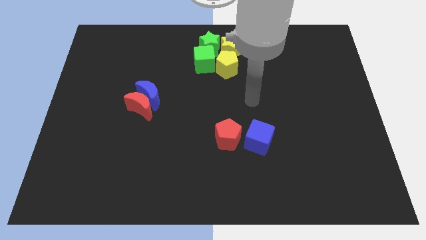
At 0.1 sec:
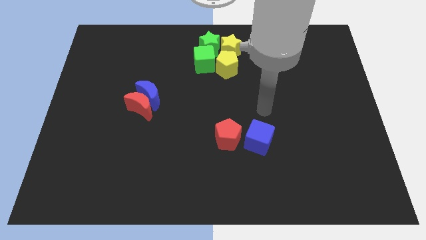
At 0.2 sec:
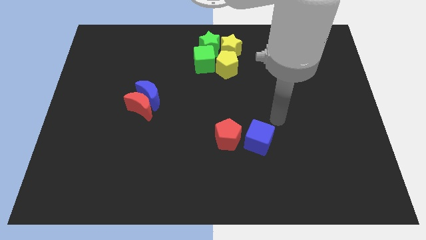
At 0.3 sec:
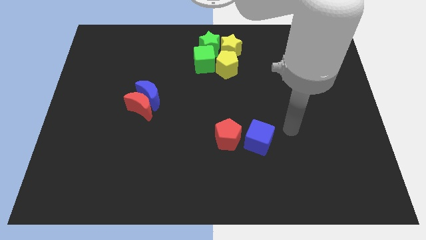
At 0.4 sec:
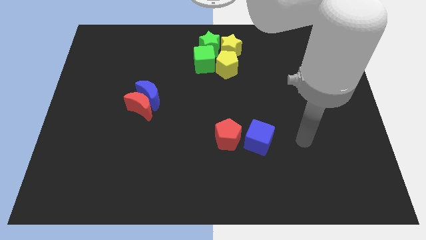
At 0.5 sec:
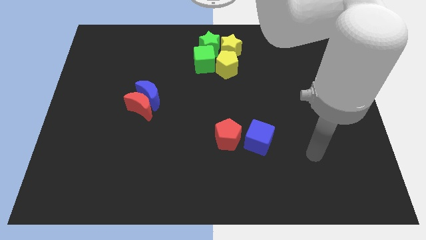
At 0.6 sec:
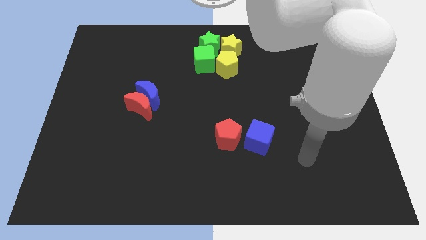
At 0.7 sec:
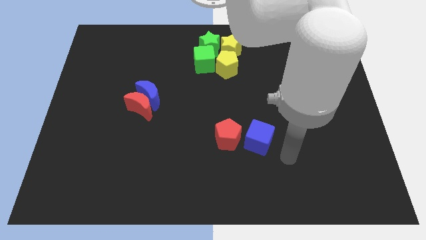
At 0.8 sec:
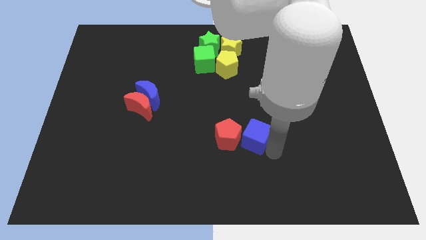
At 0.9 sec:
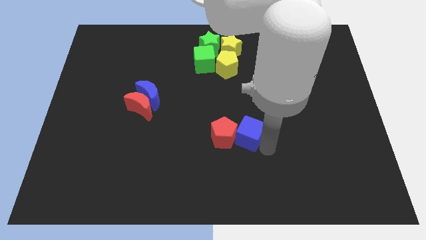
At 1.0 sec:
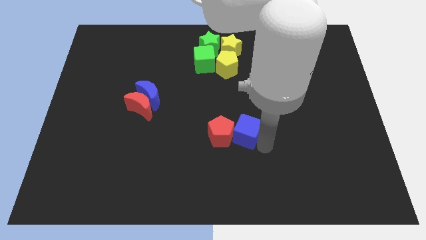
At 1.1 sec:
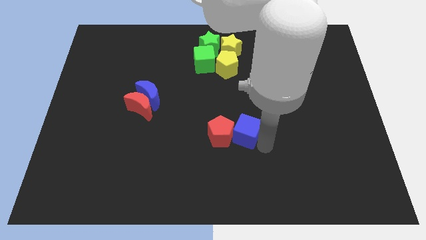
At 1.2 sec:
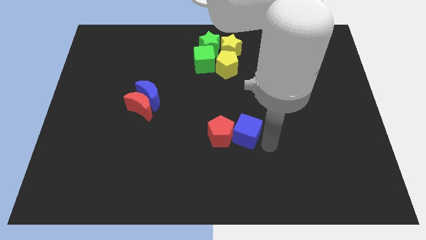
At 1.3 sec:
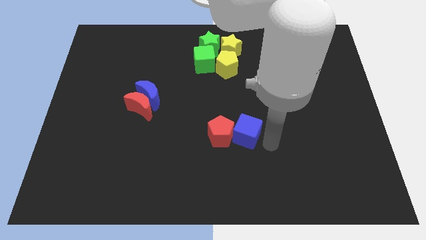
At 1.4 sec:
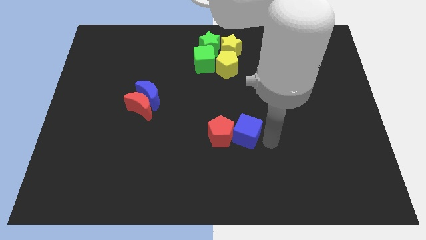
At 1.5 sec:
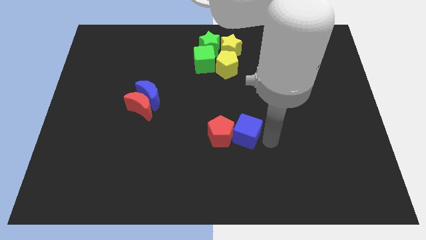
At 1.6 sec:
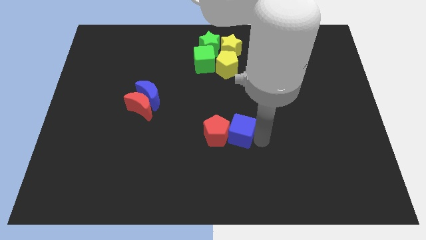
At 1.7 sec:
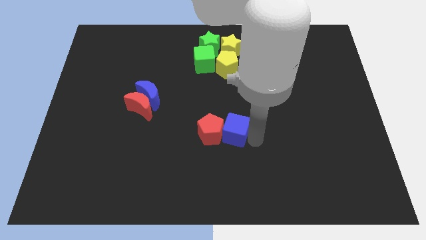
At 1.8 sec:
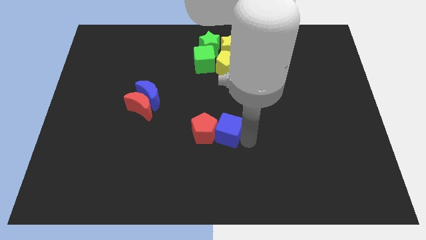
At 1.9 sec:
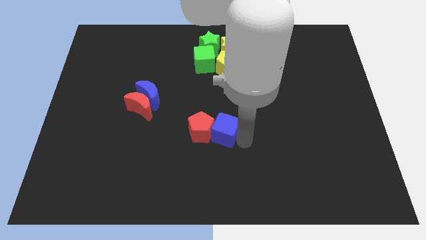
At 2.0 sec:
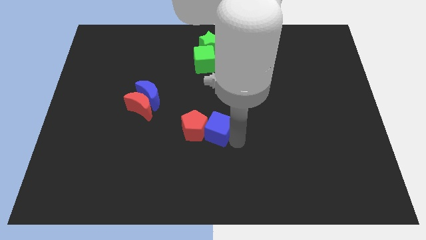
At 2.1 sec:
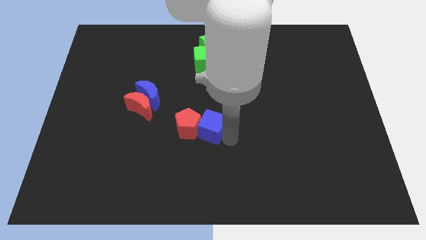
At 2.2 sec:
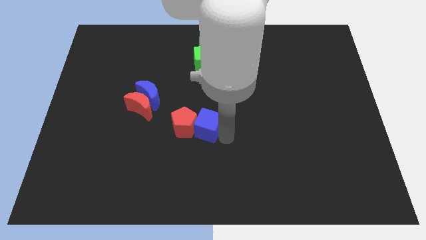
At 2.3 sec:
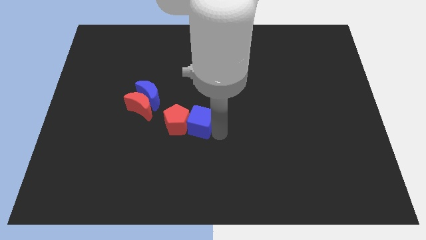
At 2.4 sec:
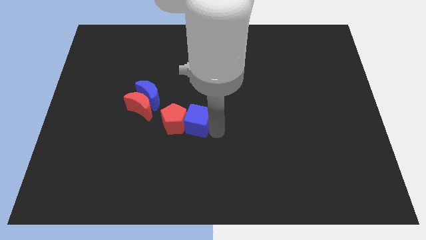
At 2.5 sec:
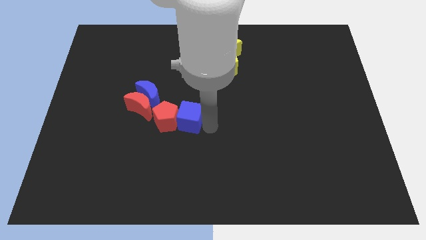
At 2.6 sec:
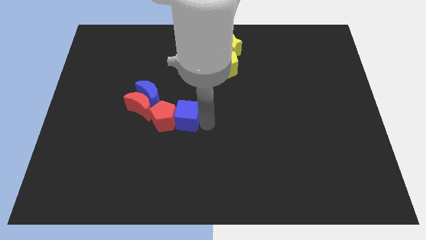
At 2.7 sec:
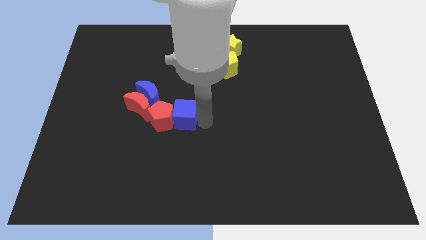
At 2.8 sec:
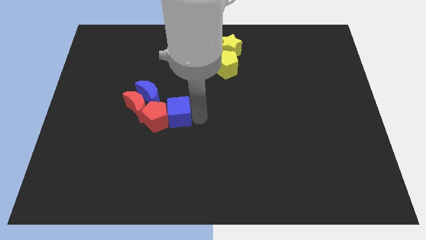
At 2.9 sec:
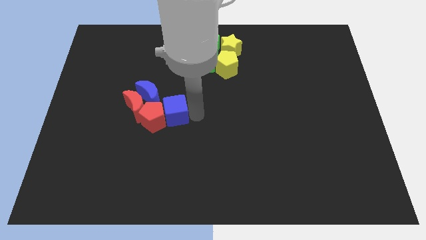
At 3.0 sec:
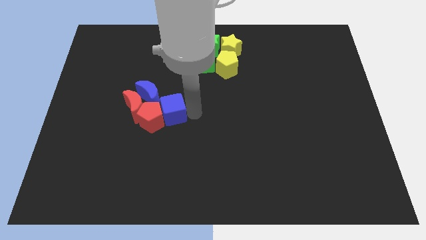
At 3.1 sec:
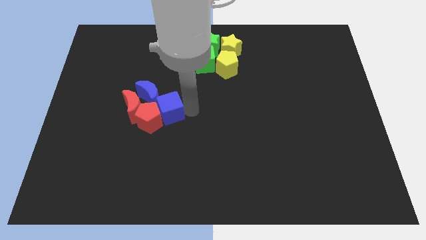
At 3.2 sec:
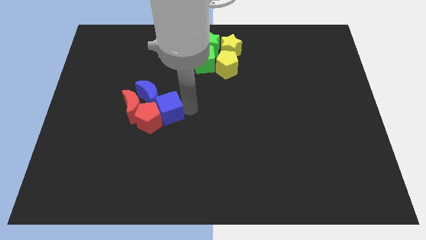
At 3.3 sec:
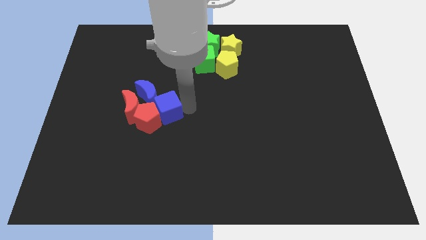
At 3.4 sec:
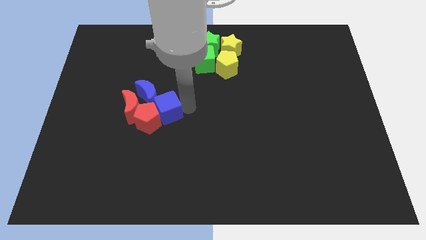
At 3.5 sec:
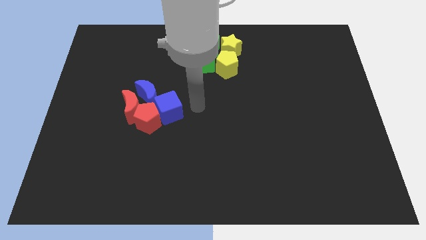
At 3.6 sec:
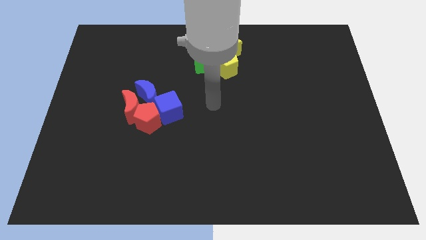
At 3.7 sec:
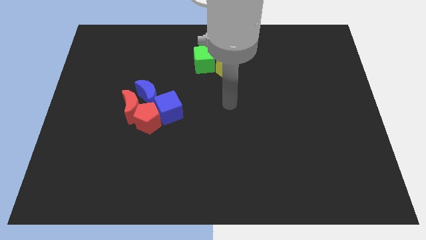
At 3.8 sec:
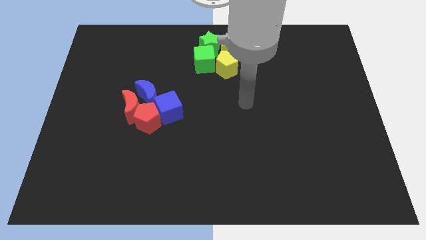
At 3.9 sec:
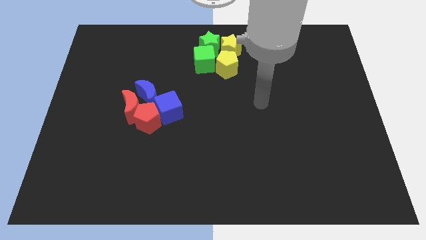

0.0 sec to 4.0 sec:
move blue cube along with red pentagon towards red moon towards the blue crescent

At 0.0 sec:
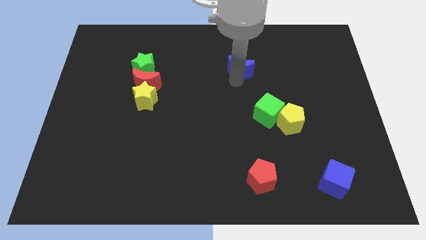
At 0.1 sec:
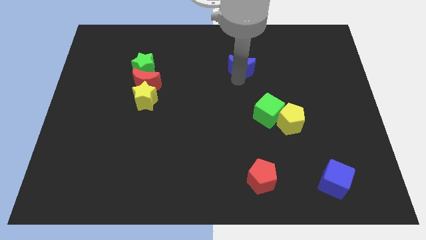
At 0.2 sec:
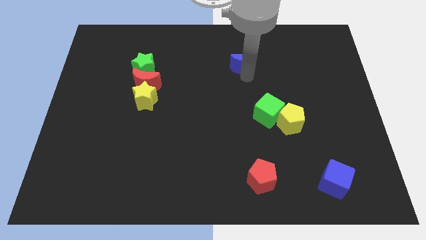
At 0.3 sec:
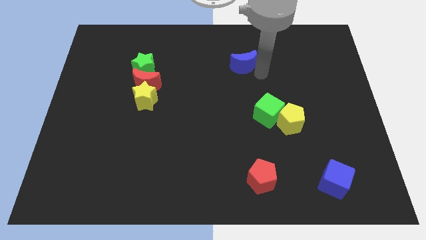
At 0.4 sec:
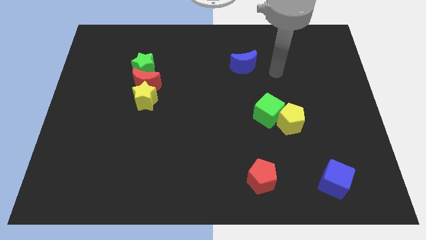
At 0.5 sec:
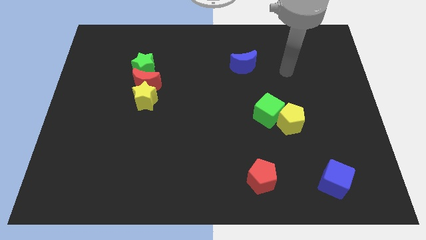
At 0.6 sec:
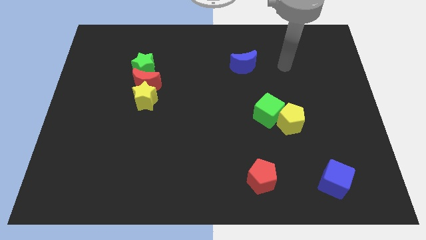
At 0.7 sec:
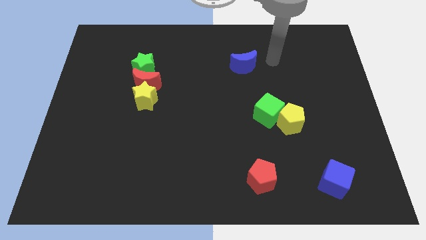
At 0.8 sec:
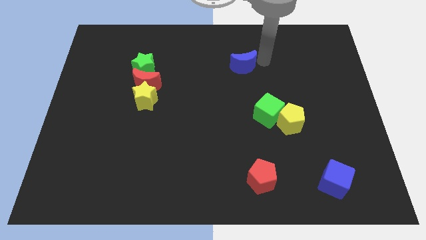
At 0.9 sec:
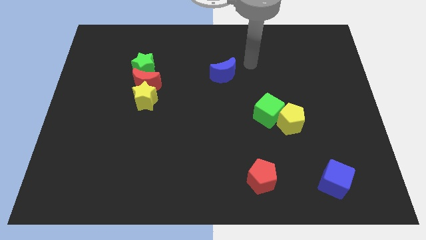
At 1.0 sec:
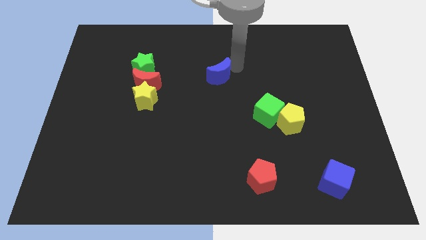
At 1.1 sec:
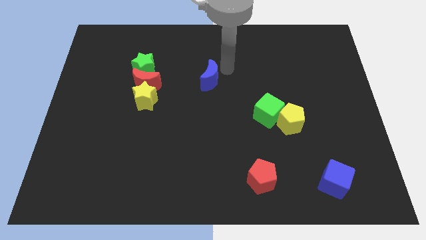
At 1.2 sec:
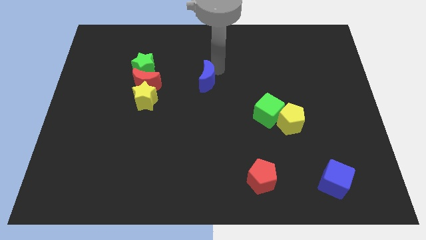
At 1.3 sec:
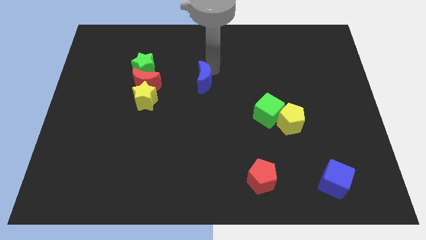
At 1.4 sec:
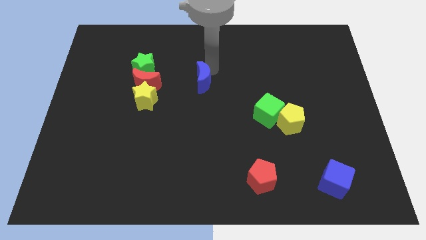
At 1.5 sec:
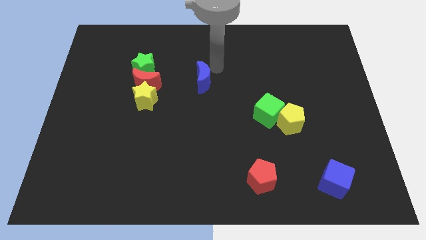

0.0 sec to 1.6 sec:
place the blue moon to the right of the red moon

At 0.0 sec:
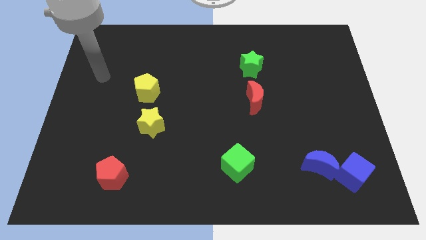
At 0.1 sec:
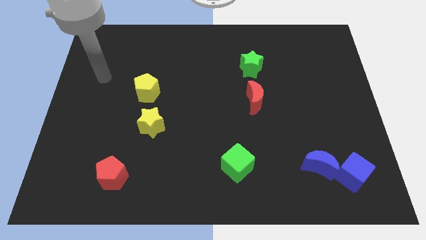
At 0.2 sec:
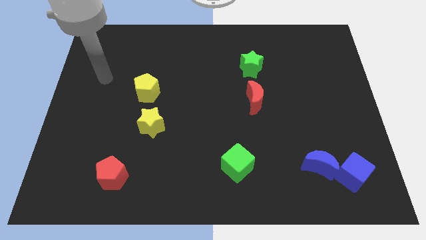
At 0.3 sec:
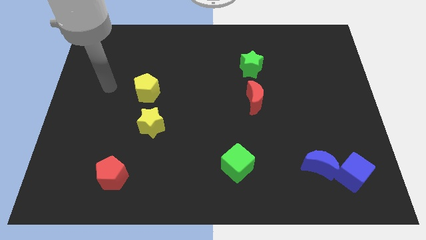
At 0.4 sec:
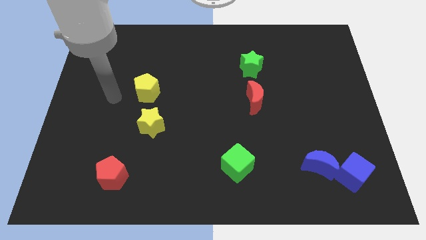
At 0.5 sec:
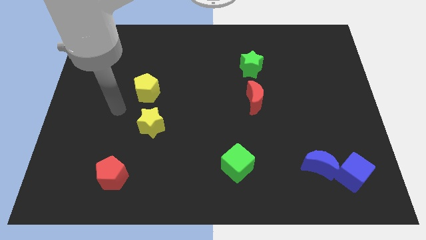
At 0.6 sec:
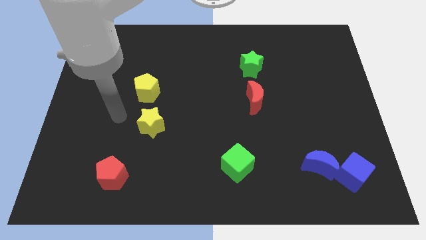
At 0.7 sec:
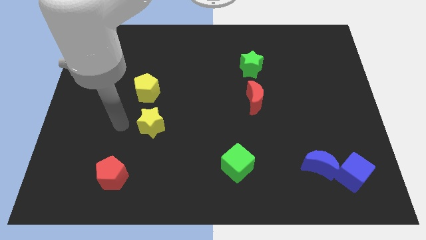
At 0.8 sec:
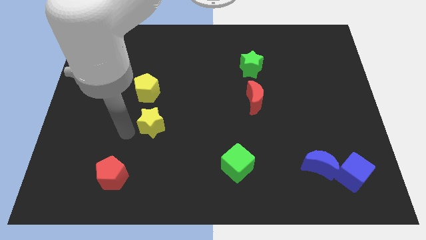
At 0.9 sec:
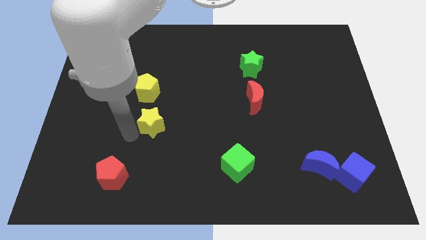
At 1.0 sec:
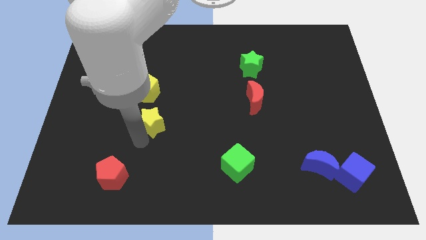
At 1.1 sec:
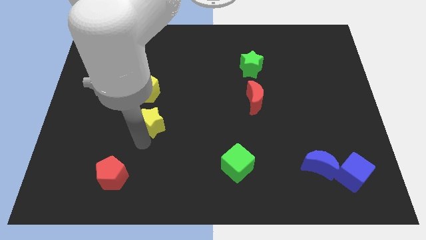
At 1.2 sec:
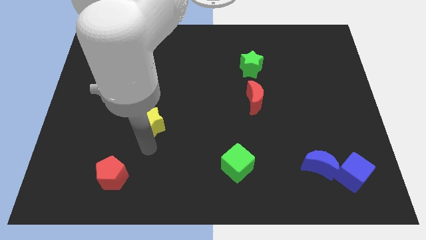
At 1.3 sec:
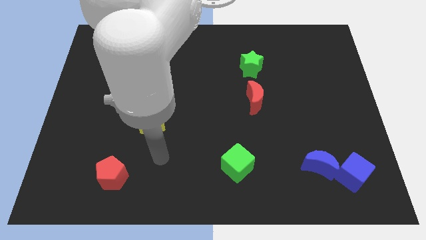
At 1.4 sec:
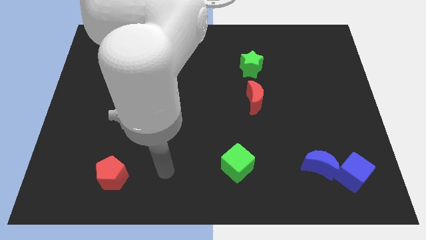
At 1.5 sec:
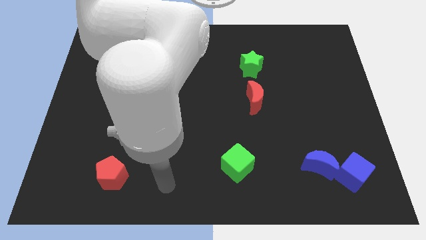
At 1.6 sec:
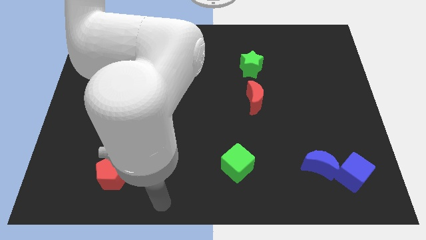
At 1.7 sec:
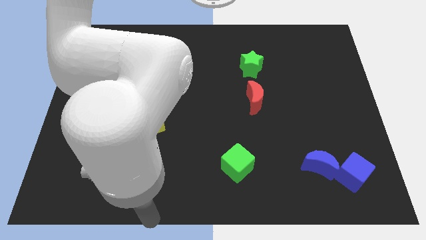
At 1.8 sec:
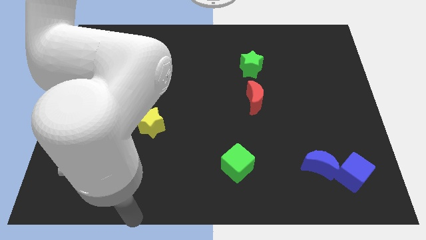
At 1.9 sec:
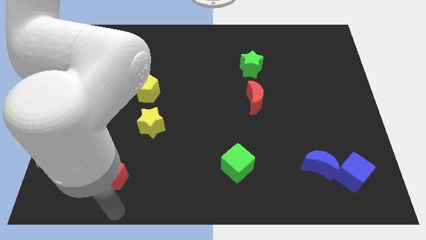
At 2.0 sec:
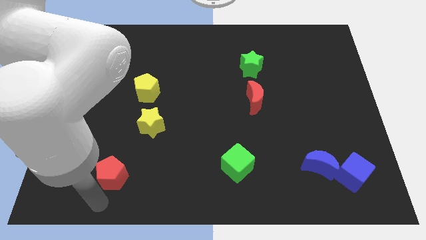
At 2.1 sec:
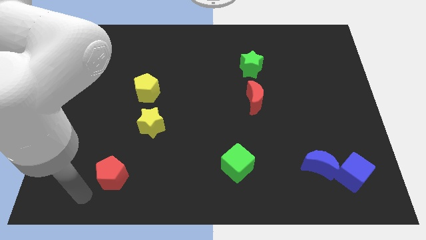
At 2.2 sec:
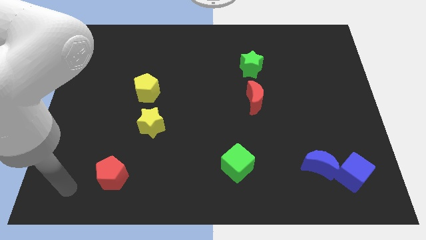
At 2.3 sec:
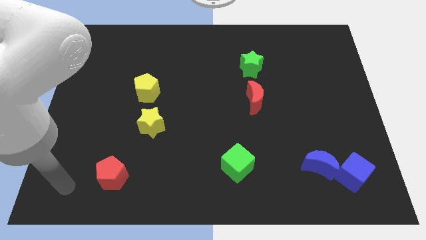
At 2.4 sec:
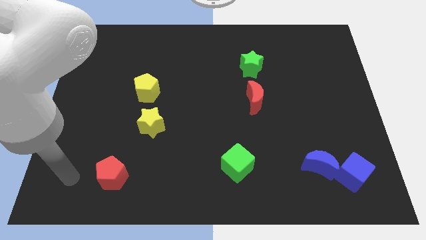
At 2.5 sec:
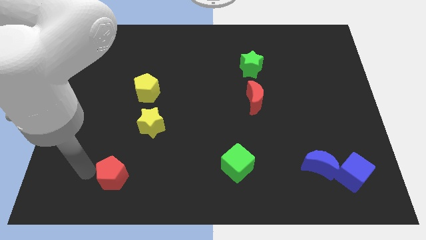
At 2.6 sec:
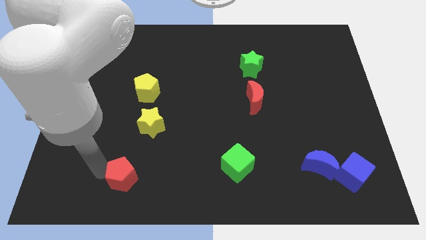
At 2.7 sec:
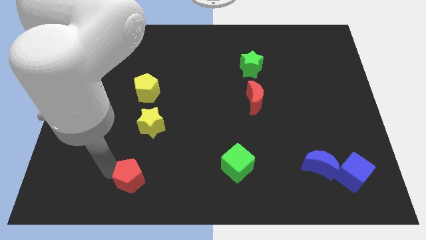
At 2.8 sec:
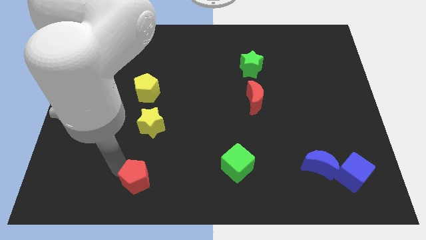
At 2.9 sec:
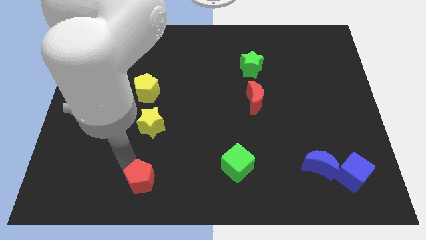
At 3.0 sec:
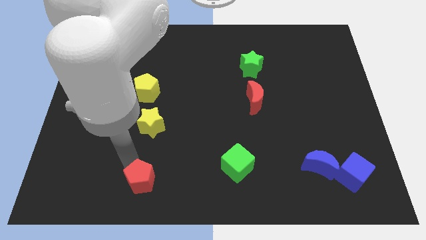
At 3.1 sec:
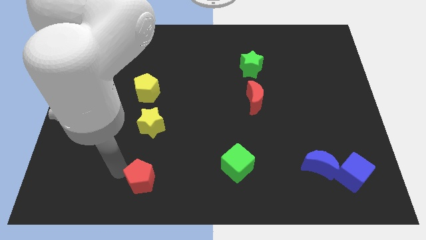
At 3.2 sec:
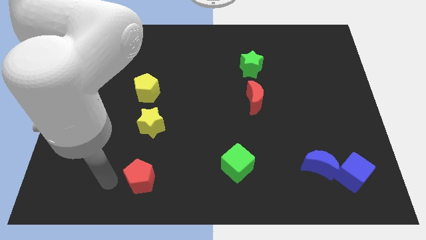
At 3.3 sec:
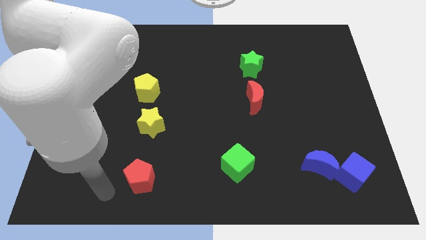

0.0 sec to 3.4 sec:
slightly move red pentagon towards right side
